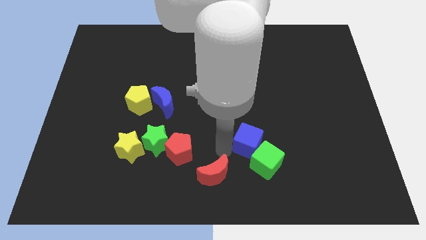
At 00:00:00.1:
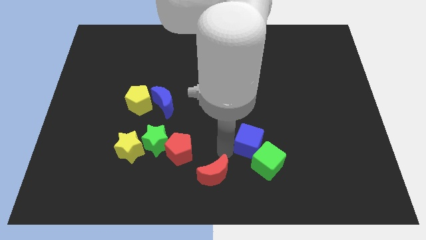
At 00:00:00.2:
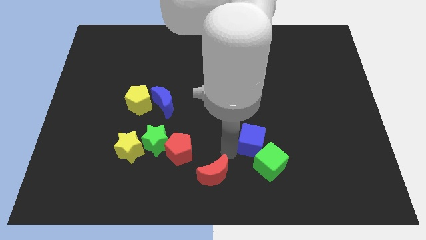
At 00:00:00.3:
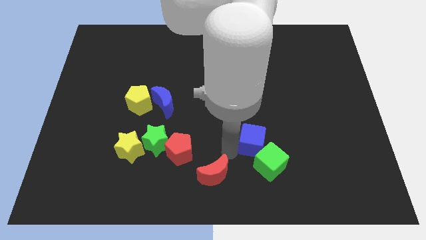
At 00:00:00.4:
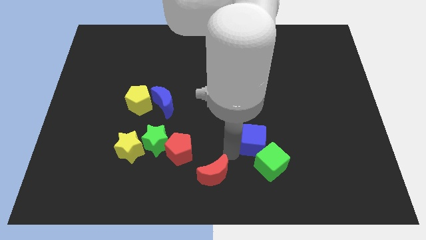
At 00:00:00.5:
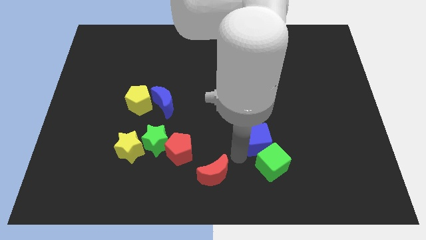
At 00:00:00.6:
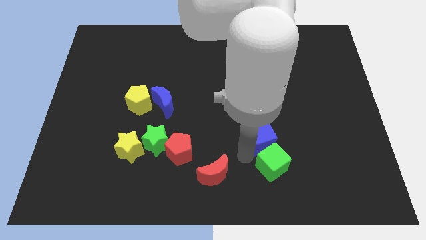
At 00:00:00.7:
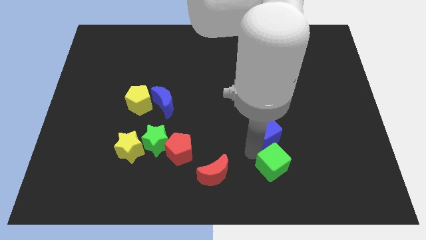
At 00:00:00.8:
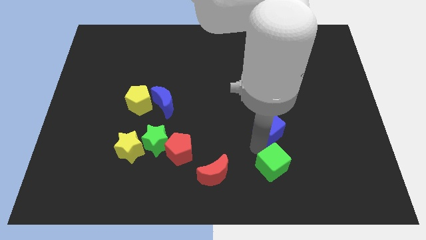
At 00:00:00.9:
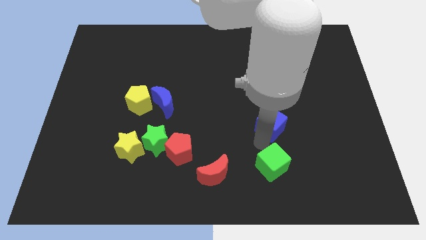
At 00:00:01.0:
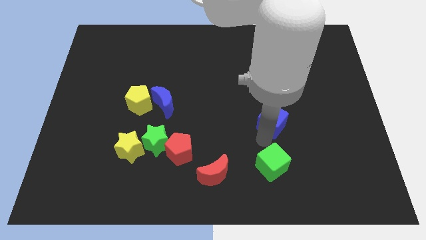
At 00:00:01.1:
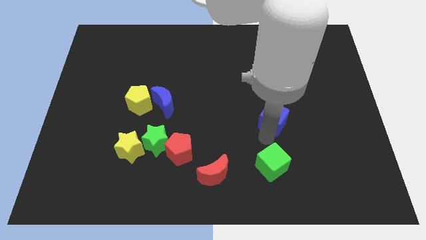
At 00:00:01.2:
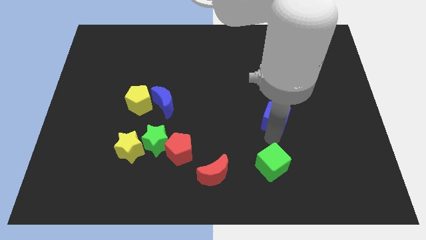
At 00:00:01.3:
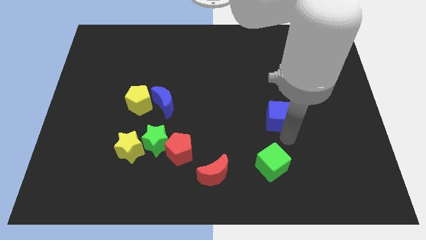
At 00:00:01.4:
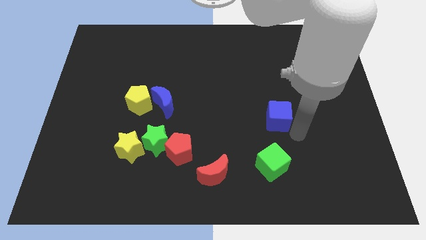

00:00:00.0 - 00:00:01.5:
separate the blue cube from the green cube

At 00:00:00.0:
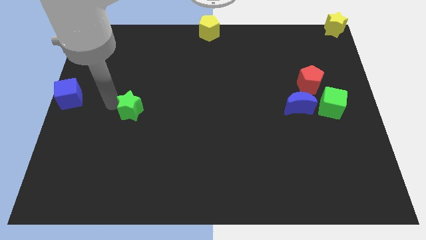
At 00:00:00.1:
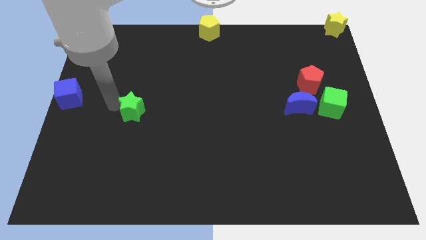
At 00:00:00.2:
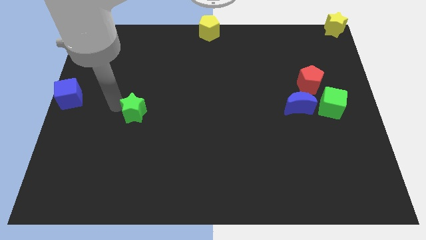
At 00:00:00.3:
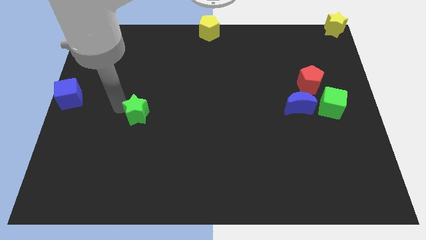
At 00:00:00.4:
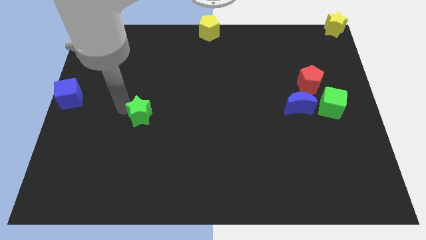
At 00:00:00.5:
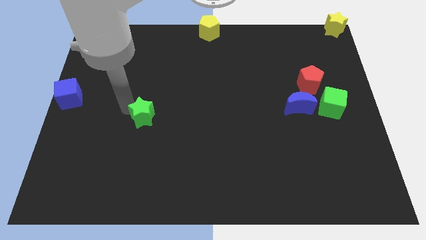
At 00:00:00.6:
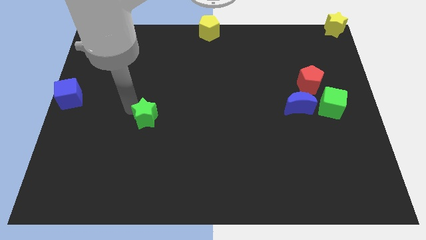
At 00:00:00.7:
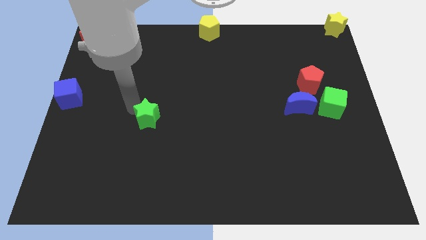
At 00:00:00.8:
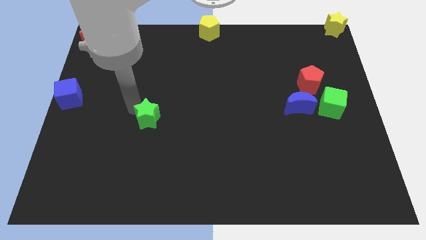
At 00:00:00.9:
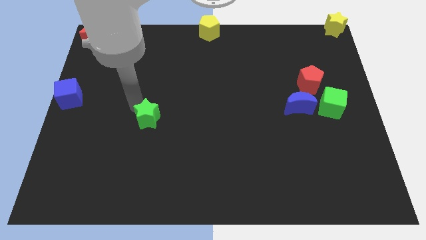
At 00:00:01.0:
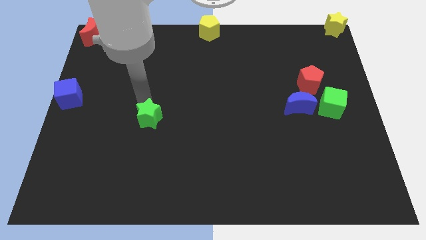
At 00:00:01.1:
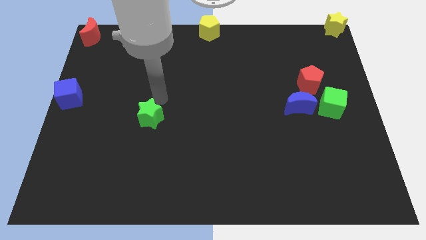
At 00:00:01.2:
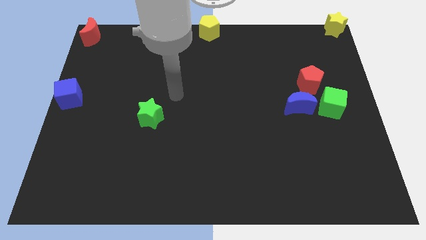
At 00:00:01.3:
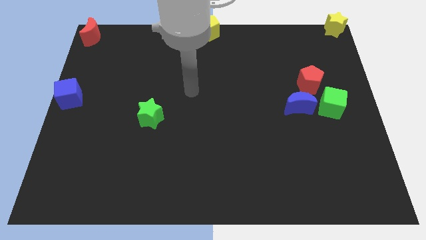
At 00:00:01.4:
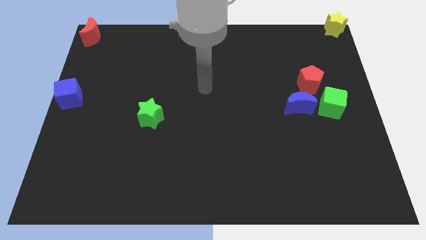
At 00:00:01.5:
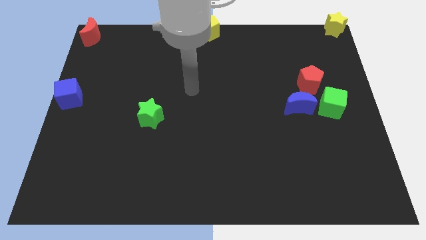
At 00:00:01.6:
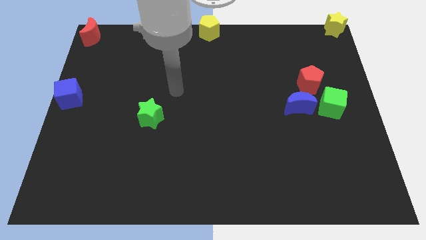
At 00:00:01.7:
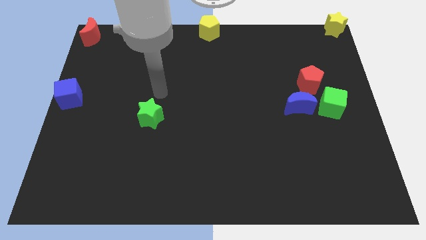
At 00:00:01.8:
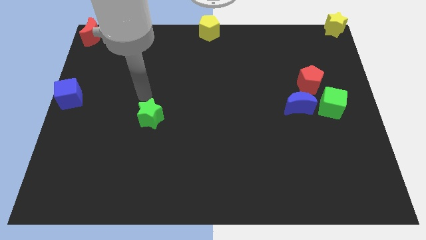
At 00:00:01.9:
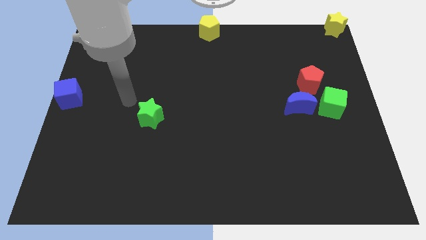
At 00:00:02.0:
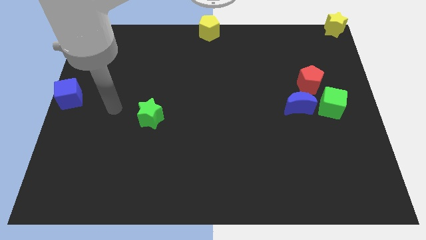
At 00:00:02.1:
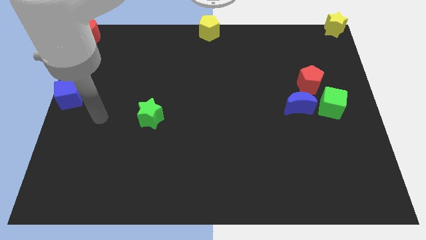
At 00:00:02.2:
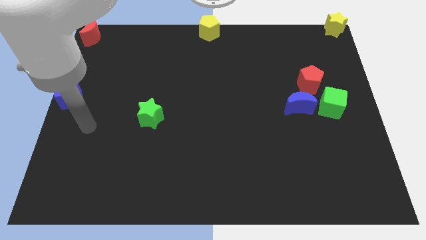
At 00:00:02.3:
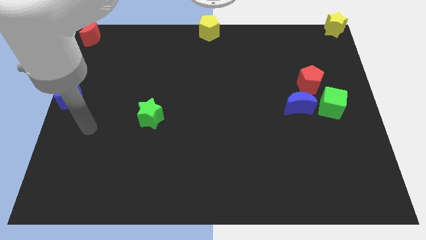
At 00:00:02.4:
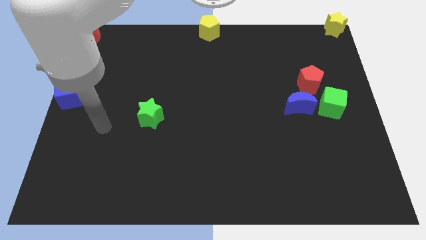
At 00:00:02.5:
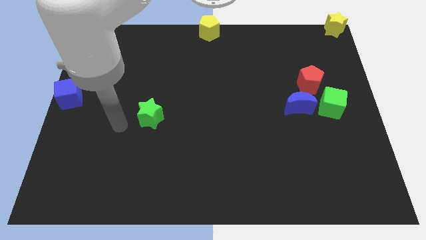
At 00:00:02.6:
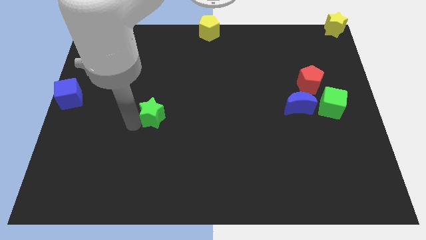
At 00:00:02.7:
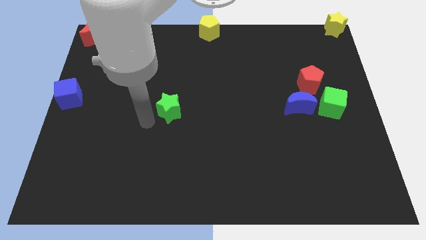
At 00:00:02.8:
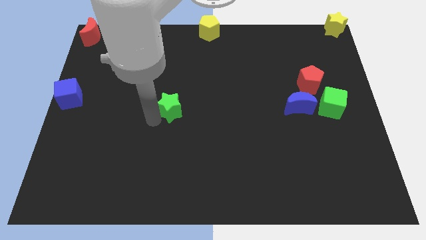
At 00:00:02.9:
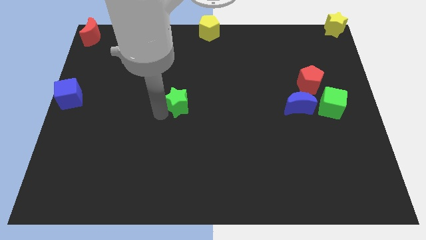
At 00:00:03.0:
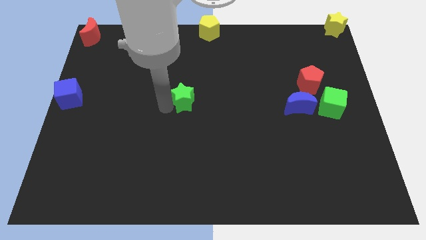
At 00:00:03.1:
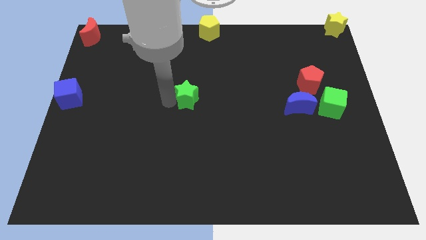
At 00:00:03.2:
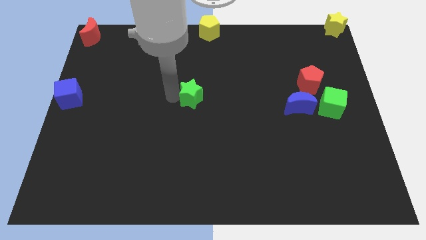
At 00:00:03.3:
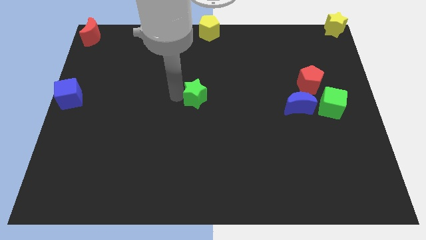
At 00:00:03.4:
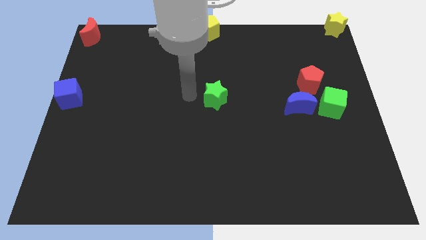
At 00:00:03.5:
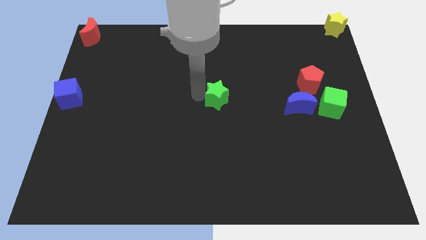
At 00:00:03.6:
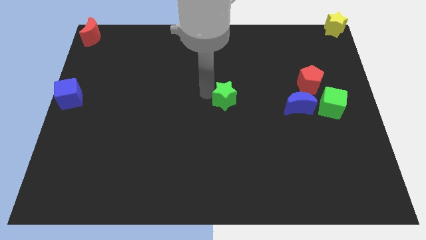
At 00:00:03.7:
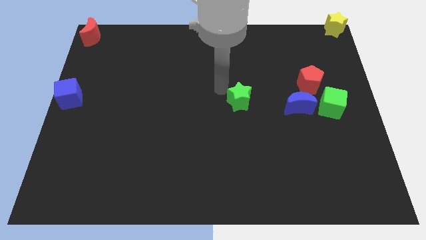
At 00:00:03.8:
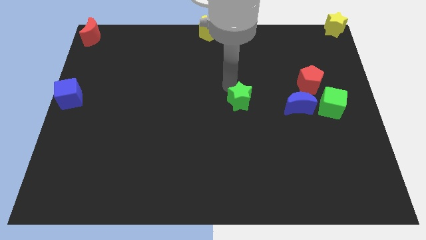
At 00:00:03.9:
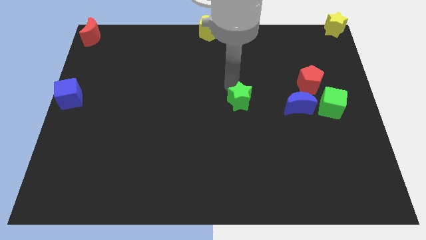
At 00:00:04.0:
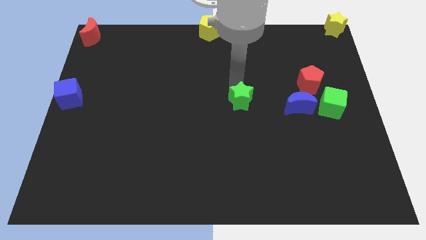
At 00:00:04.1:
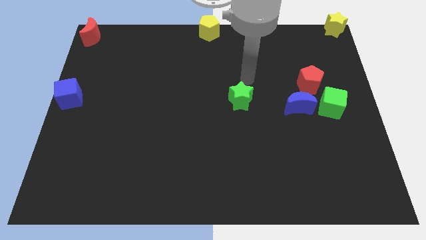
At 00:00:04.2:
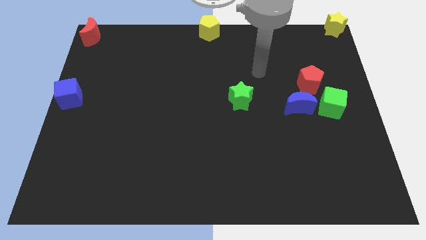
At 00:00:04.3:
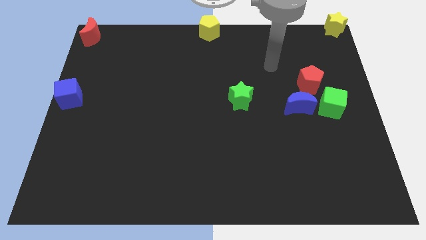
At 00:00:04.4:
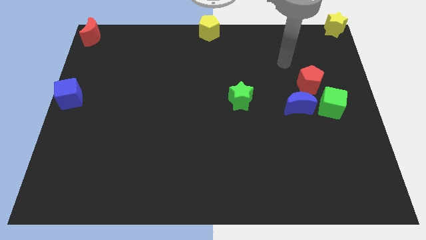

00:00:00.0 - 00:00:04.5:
push green star to the center of the board

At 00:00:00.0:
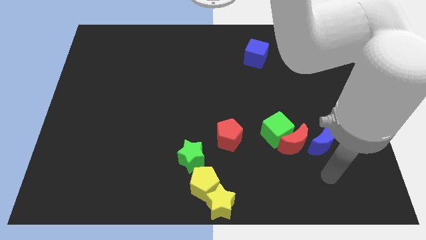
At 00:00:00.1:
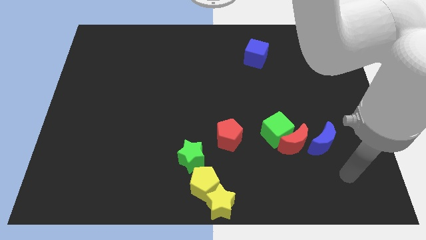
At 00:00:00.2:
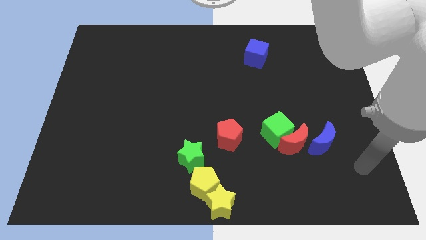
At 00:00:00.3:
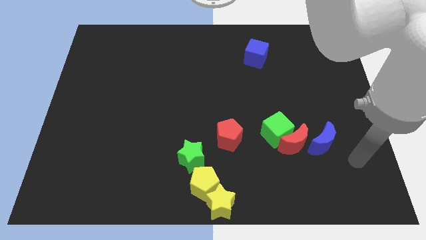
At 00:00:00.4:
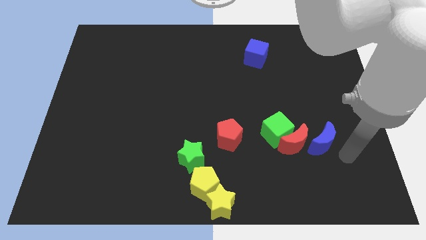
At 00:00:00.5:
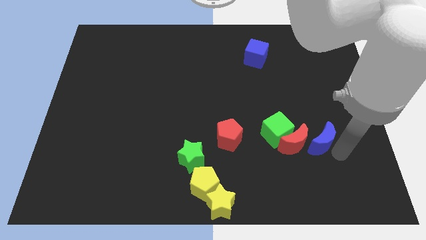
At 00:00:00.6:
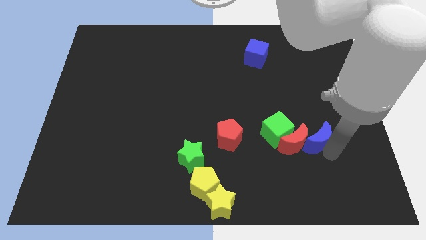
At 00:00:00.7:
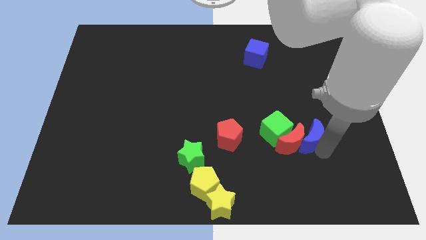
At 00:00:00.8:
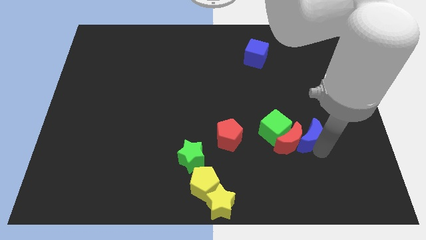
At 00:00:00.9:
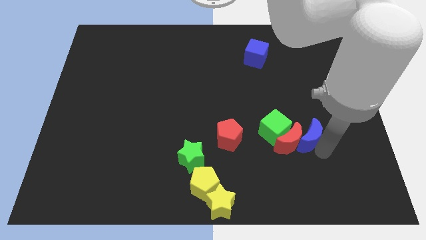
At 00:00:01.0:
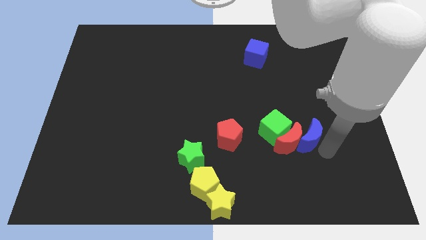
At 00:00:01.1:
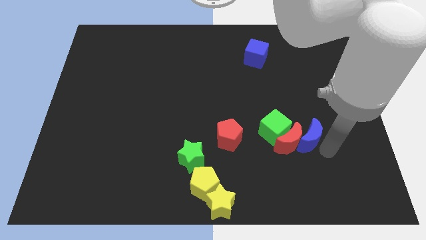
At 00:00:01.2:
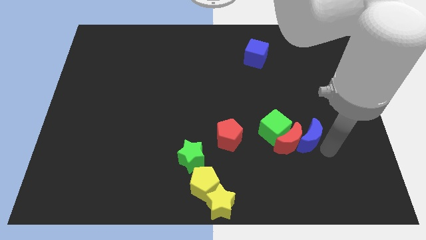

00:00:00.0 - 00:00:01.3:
push blue crescent into red crescent

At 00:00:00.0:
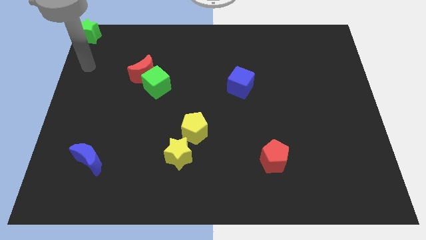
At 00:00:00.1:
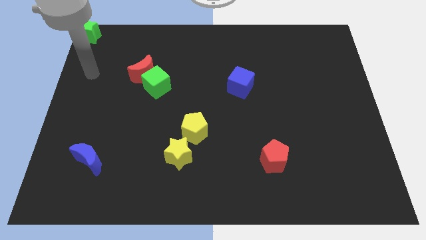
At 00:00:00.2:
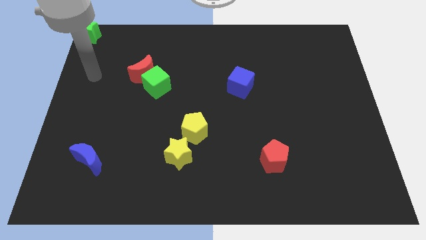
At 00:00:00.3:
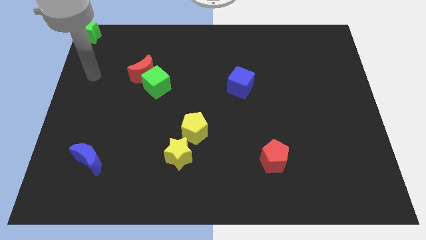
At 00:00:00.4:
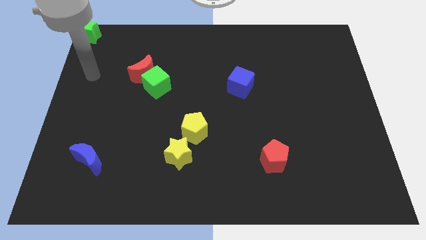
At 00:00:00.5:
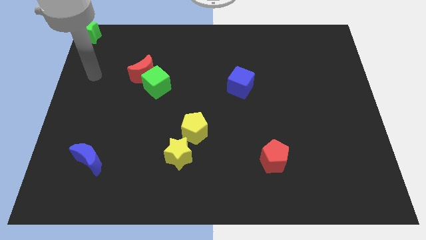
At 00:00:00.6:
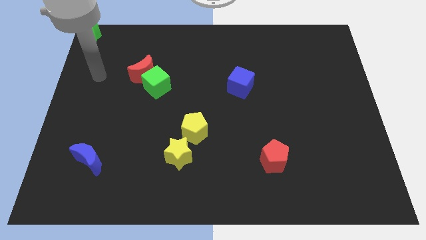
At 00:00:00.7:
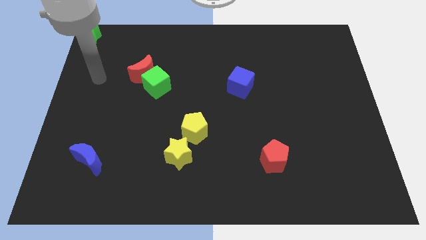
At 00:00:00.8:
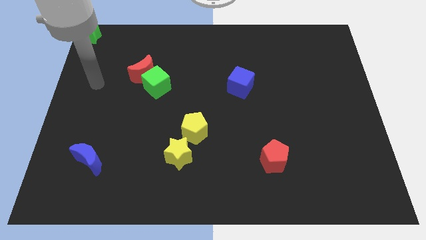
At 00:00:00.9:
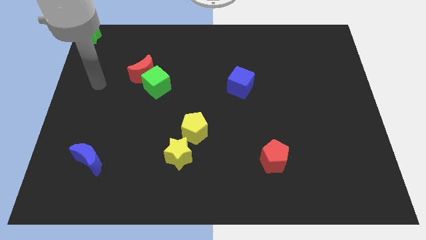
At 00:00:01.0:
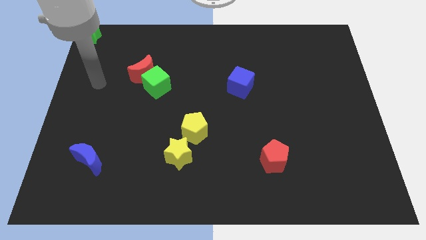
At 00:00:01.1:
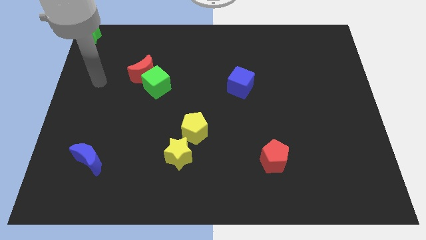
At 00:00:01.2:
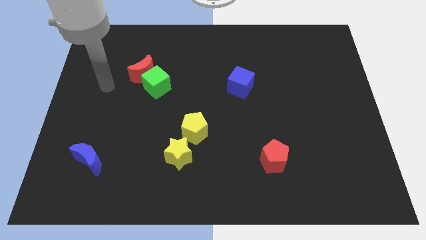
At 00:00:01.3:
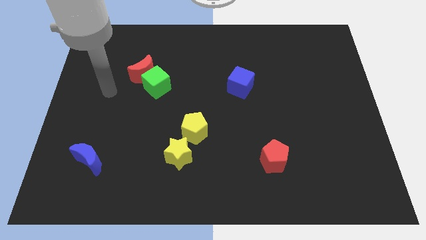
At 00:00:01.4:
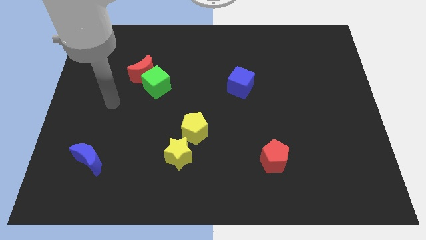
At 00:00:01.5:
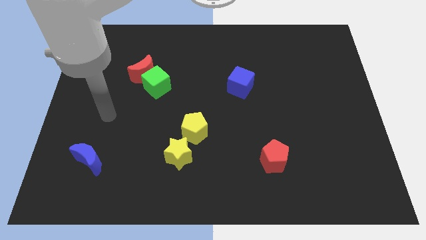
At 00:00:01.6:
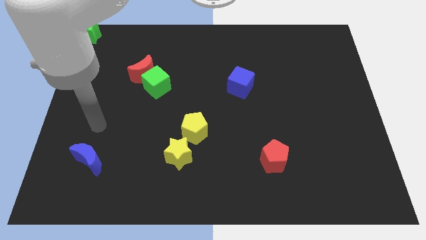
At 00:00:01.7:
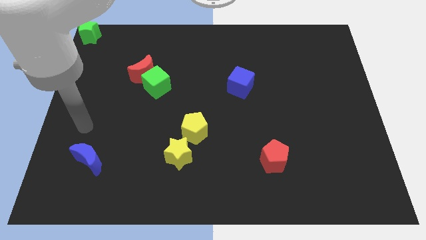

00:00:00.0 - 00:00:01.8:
go to the top side of the blue crescent
